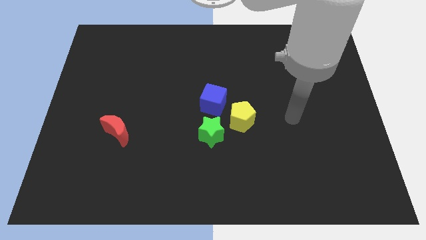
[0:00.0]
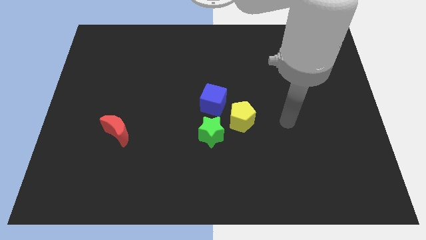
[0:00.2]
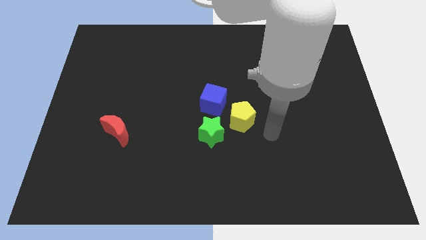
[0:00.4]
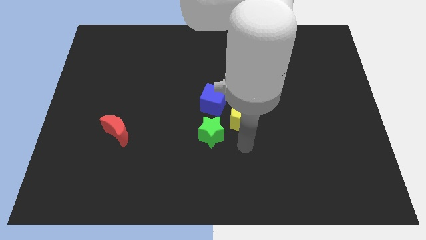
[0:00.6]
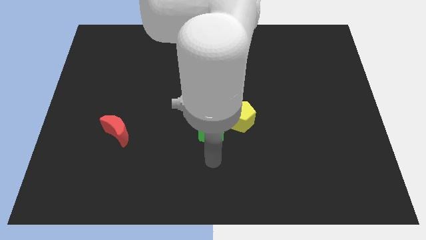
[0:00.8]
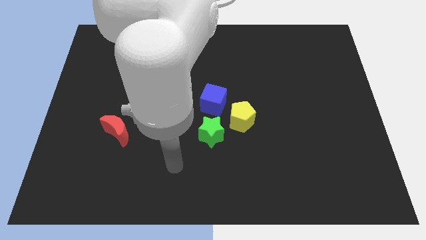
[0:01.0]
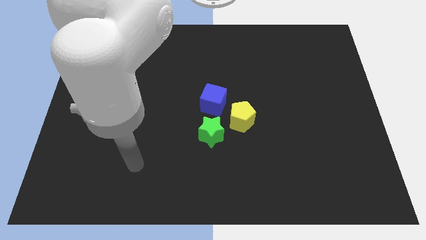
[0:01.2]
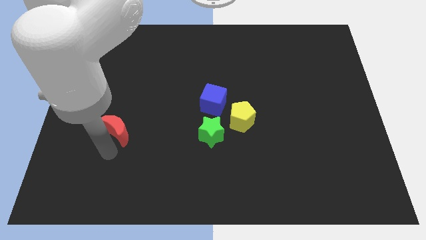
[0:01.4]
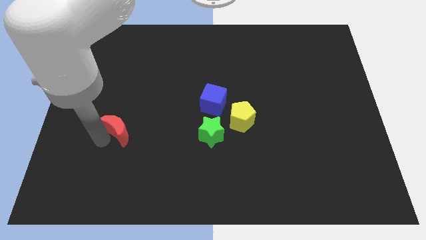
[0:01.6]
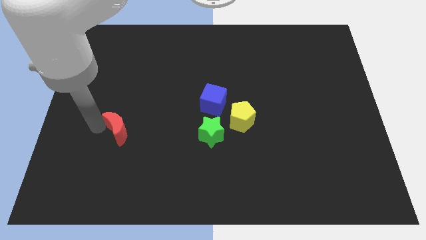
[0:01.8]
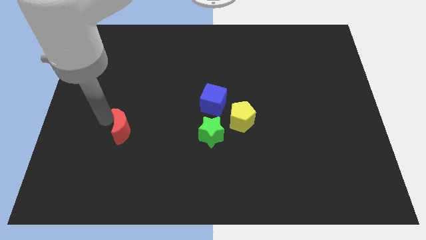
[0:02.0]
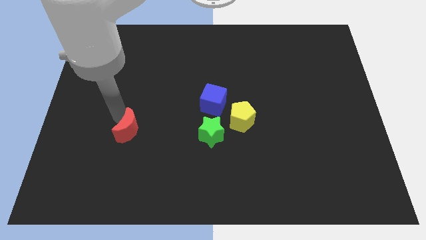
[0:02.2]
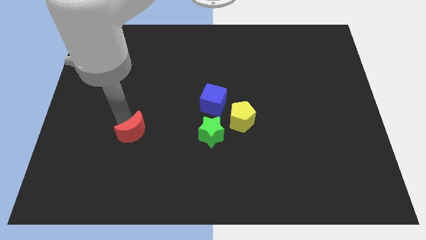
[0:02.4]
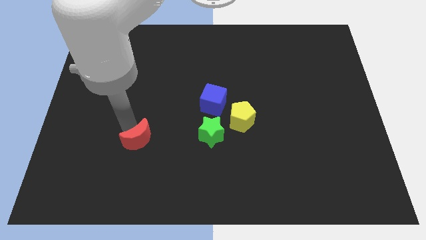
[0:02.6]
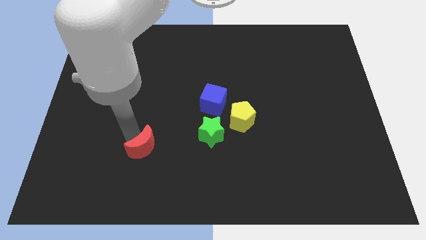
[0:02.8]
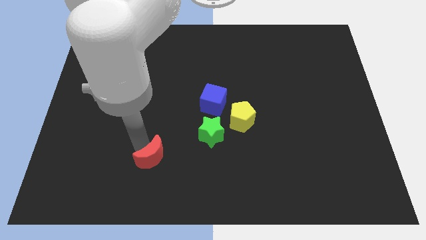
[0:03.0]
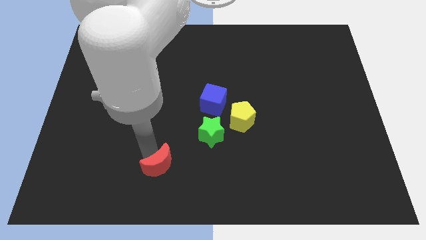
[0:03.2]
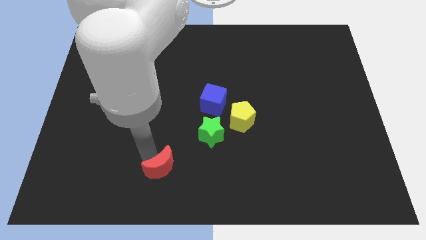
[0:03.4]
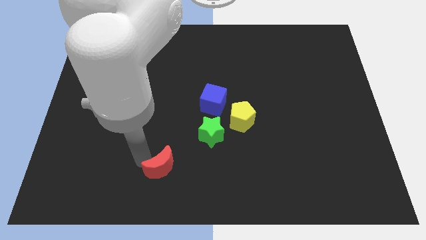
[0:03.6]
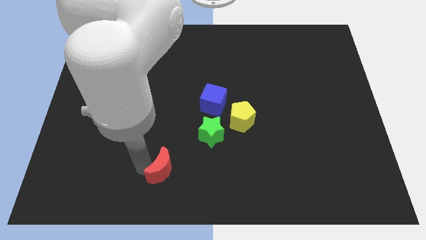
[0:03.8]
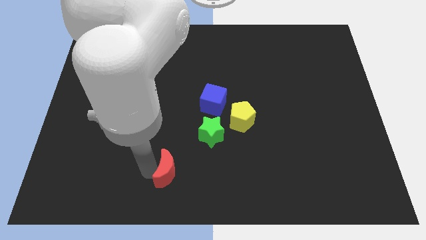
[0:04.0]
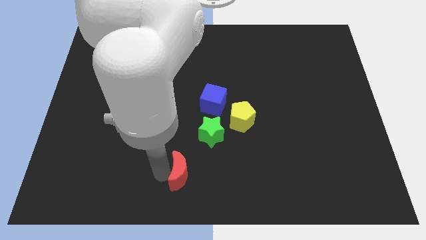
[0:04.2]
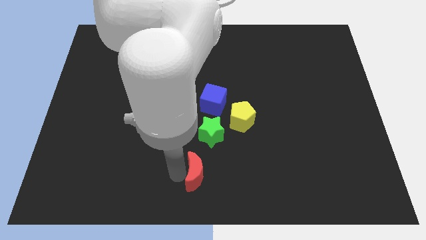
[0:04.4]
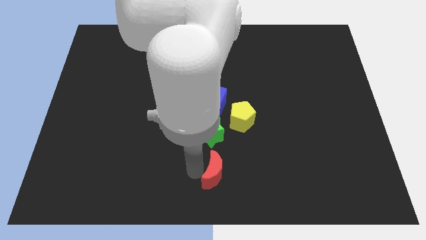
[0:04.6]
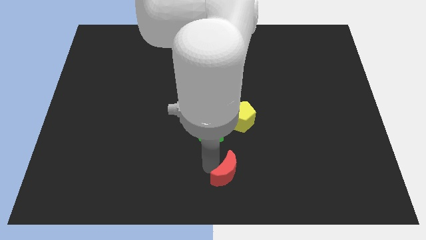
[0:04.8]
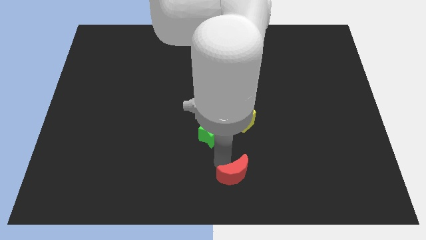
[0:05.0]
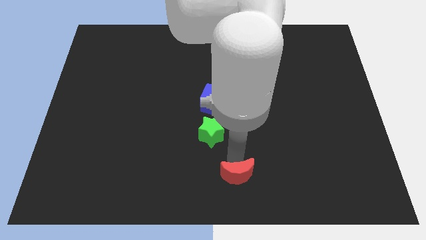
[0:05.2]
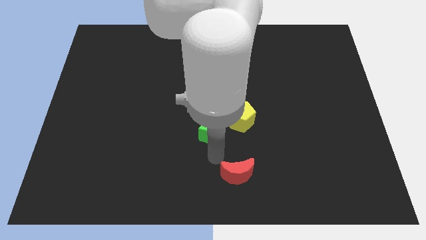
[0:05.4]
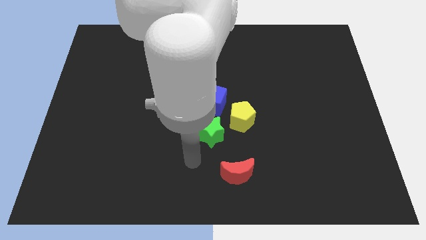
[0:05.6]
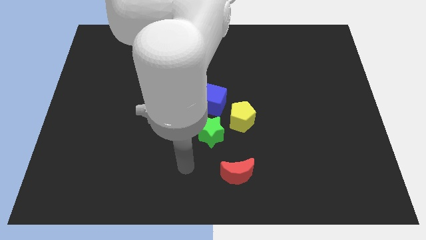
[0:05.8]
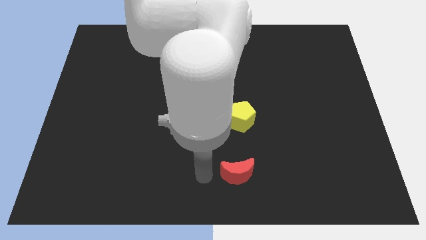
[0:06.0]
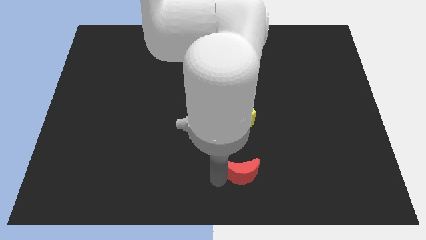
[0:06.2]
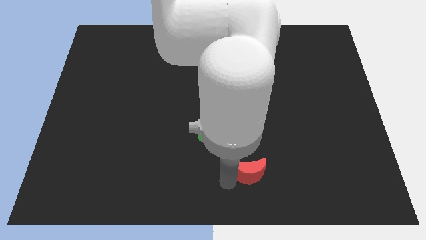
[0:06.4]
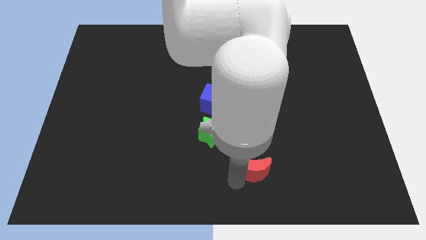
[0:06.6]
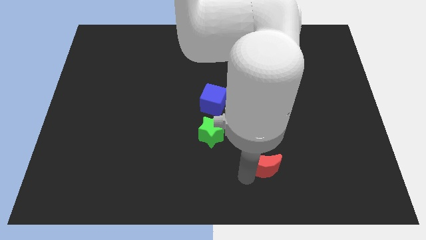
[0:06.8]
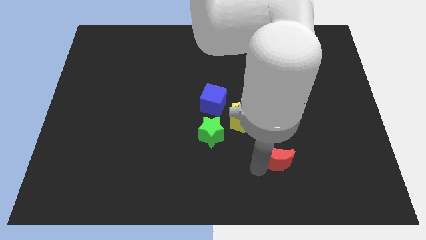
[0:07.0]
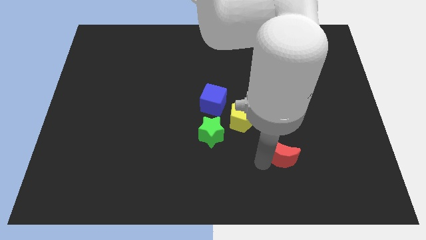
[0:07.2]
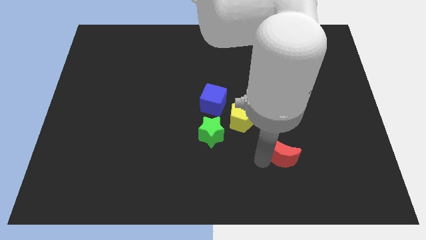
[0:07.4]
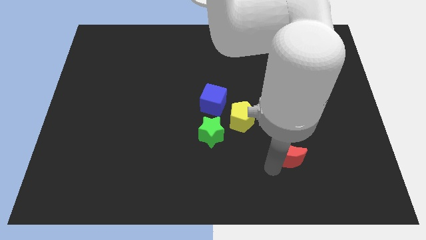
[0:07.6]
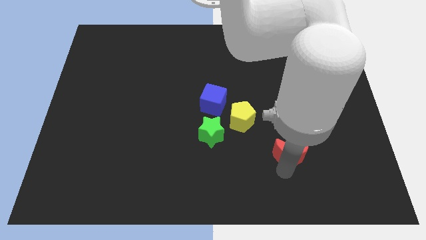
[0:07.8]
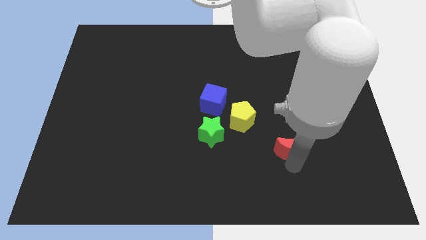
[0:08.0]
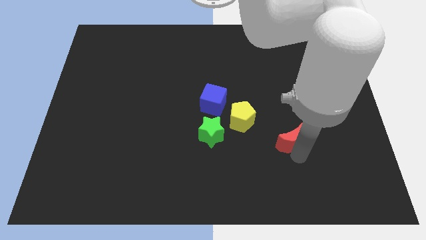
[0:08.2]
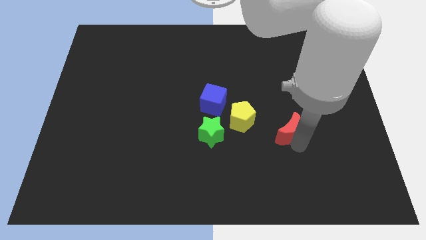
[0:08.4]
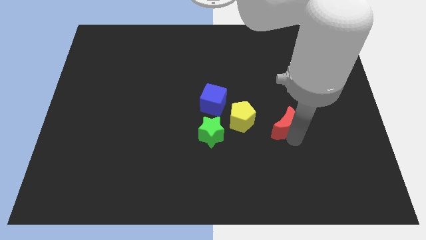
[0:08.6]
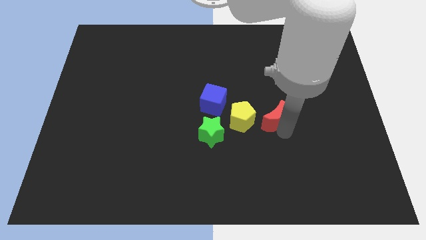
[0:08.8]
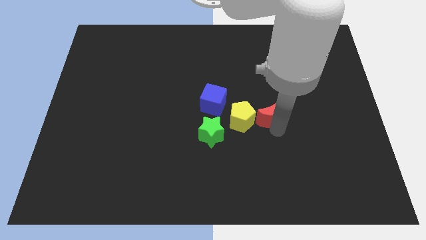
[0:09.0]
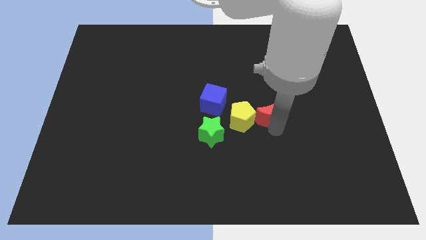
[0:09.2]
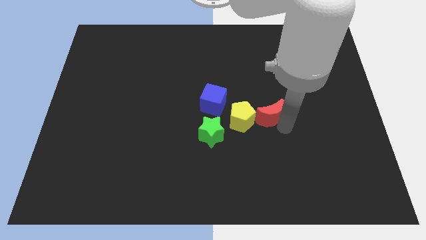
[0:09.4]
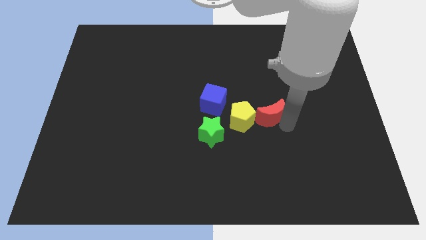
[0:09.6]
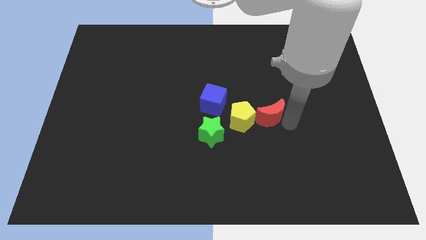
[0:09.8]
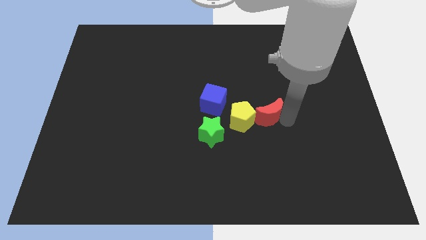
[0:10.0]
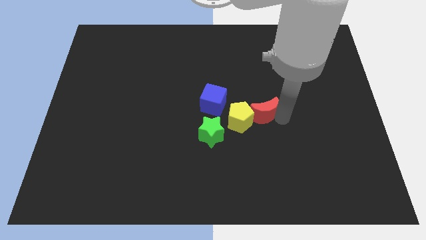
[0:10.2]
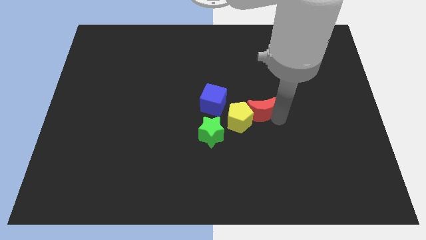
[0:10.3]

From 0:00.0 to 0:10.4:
slide the red block to the yellow block

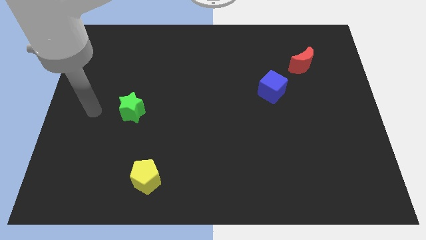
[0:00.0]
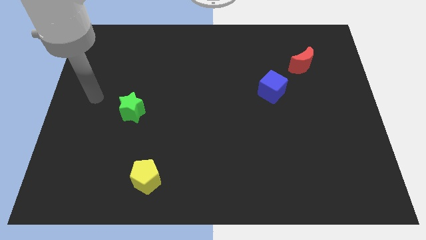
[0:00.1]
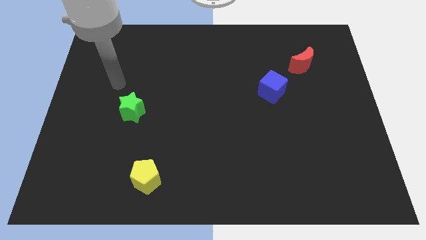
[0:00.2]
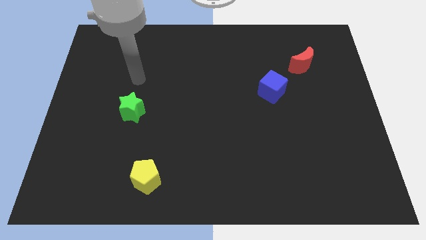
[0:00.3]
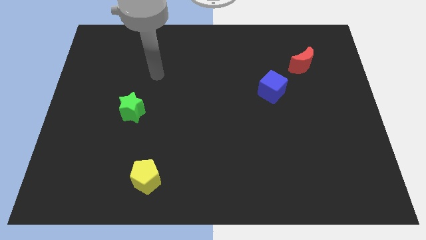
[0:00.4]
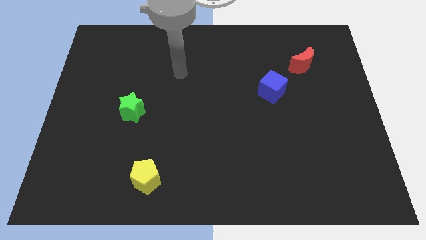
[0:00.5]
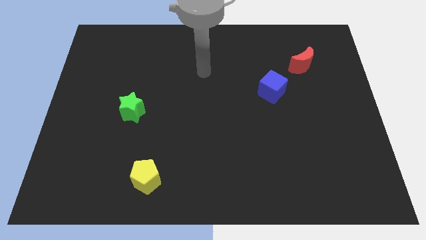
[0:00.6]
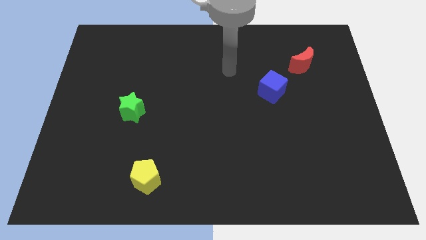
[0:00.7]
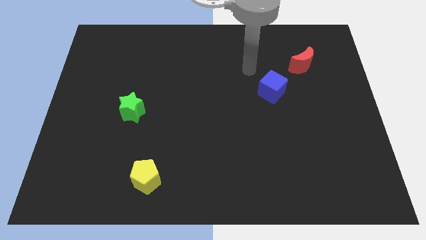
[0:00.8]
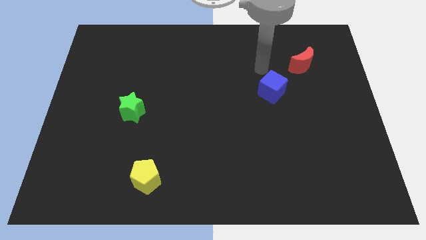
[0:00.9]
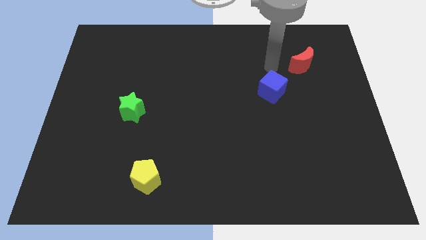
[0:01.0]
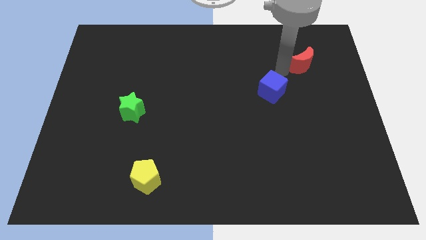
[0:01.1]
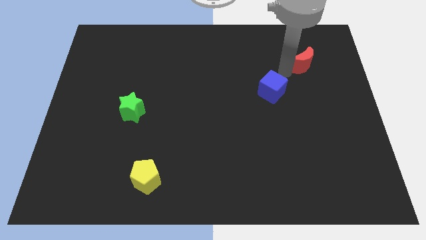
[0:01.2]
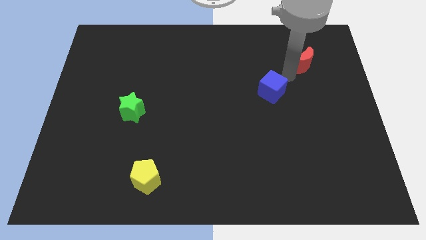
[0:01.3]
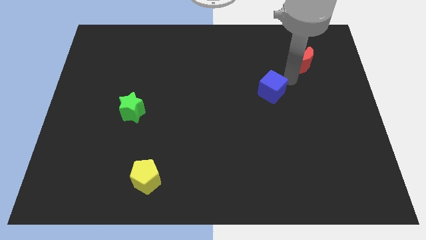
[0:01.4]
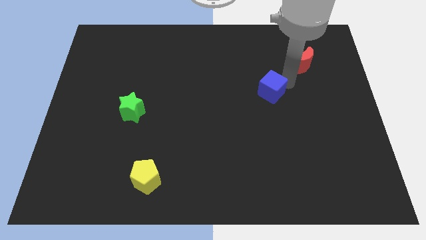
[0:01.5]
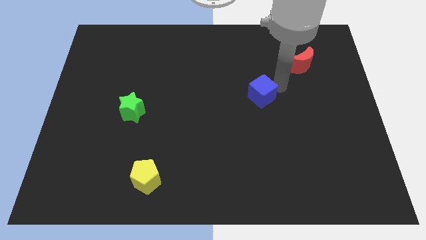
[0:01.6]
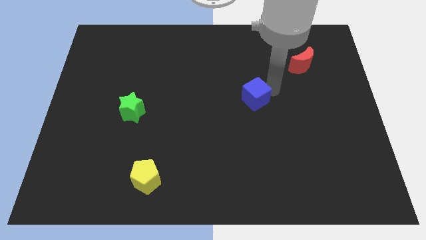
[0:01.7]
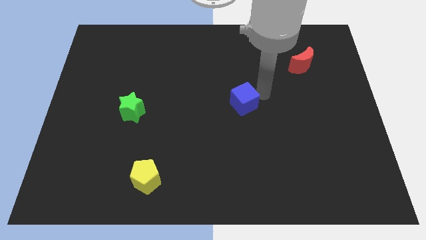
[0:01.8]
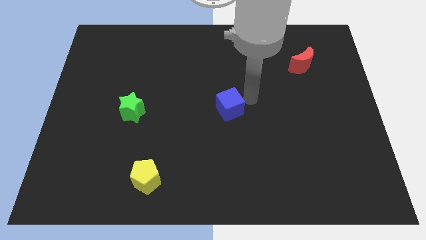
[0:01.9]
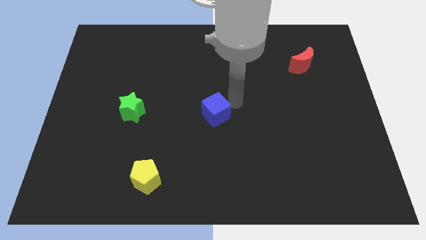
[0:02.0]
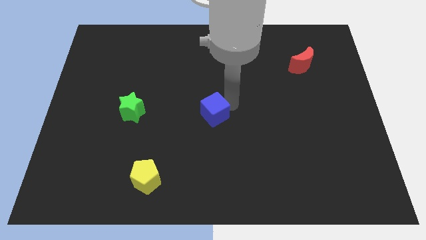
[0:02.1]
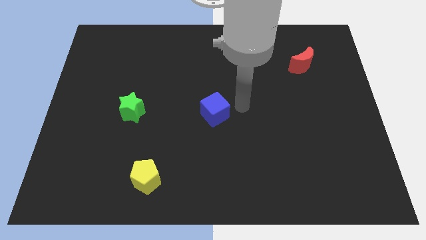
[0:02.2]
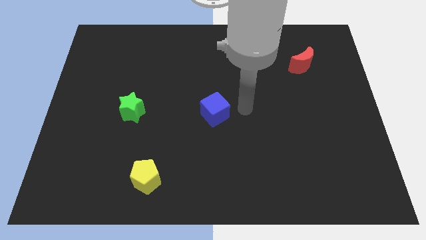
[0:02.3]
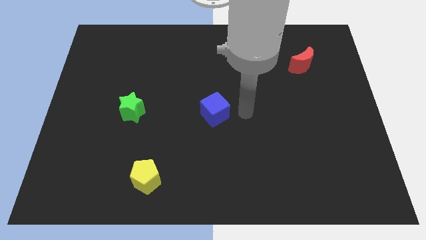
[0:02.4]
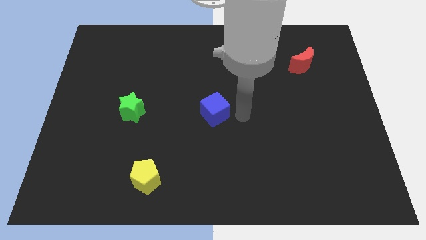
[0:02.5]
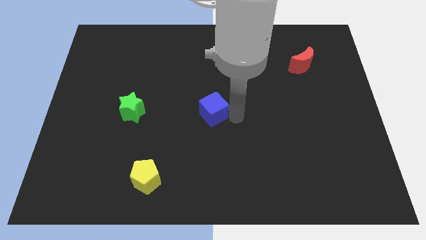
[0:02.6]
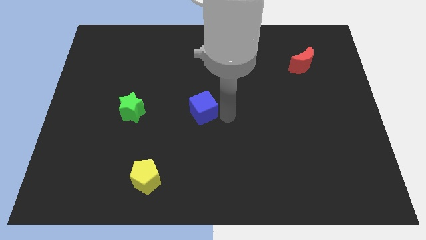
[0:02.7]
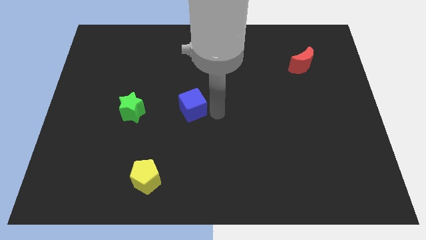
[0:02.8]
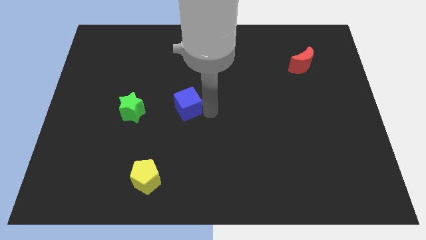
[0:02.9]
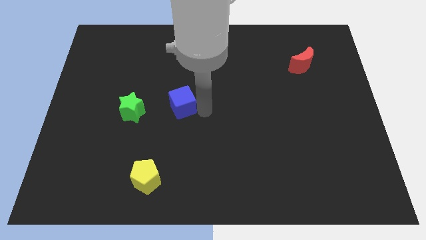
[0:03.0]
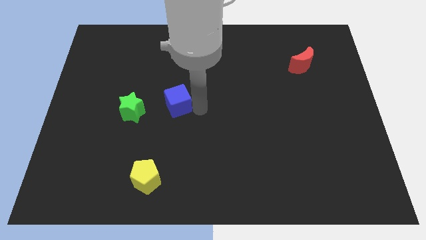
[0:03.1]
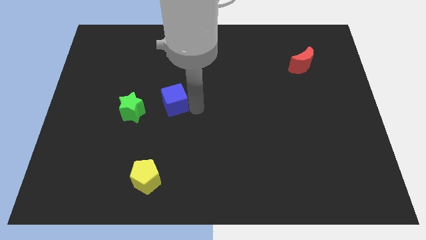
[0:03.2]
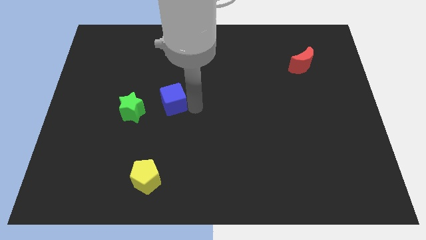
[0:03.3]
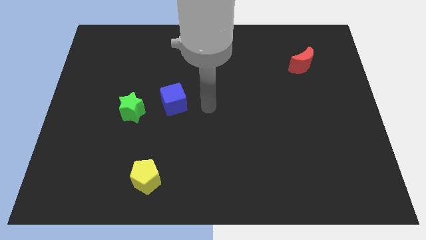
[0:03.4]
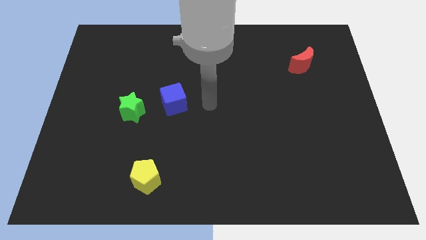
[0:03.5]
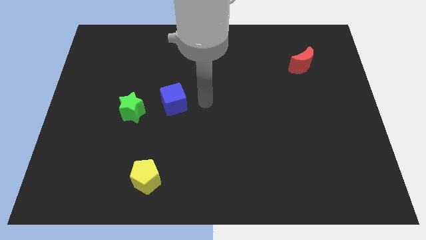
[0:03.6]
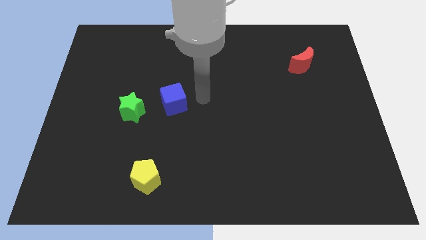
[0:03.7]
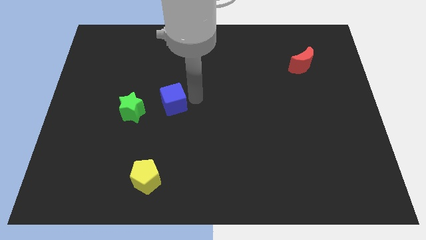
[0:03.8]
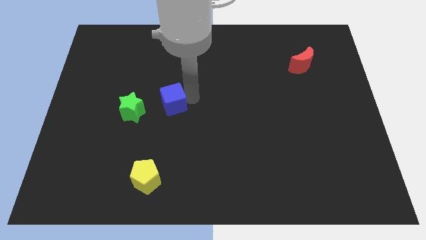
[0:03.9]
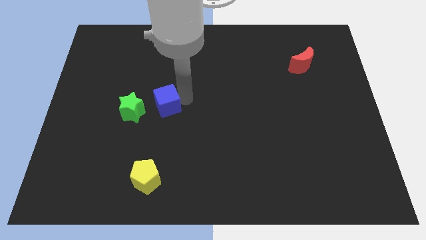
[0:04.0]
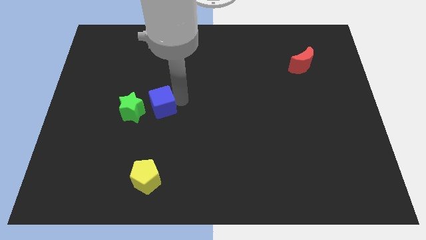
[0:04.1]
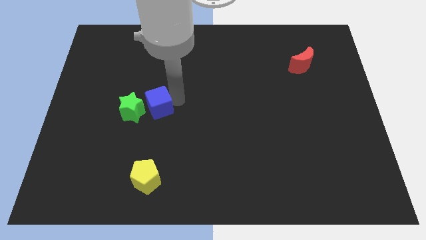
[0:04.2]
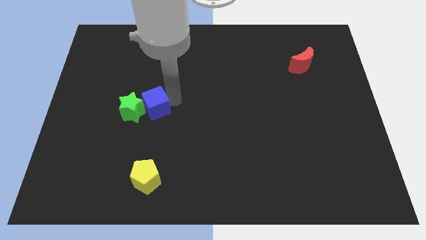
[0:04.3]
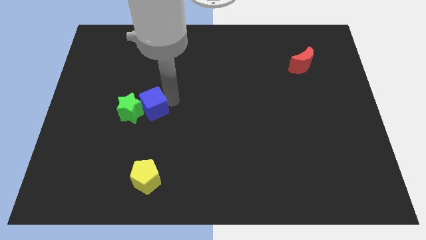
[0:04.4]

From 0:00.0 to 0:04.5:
put the blue cube towards the green block
